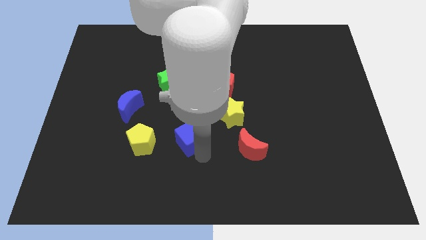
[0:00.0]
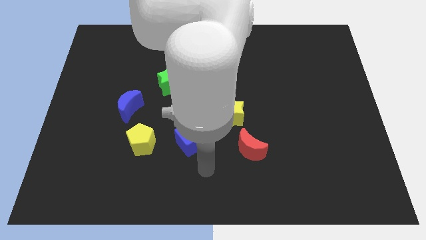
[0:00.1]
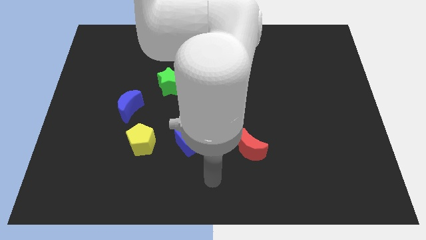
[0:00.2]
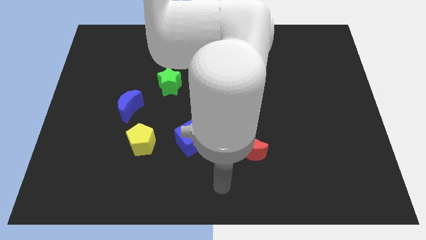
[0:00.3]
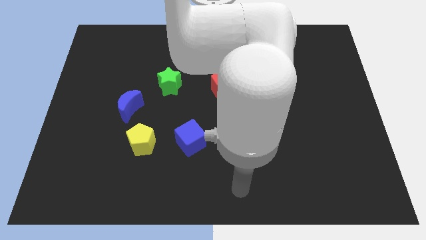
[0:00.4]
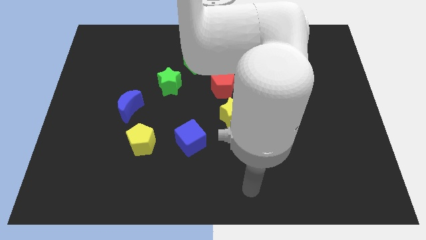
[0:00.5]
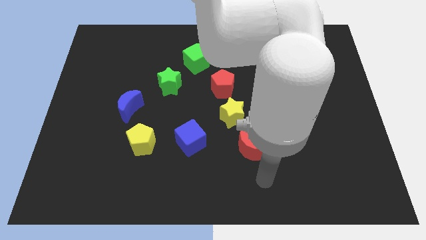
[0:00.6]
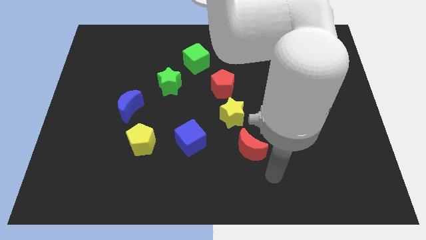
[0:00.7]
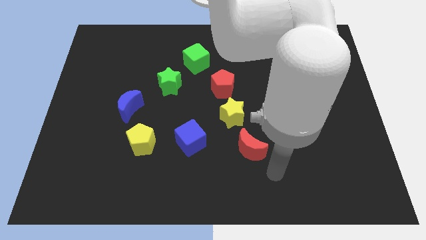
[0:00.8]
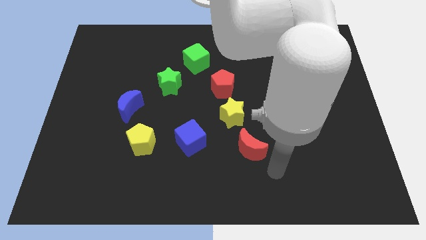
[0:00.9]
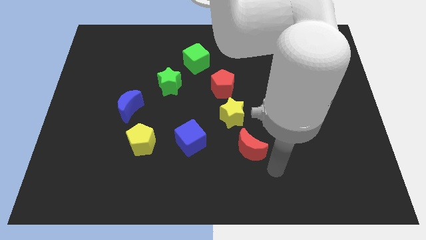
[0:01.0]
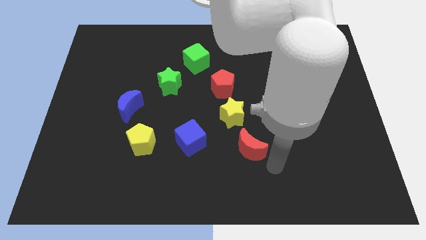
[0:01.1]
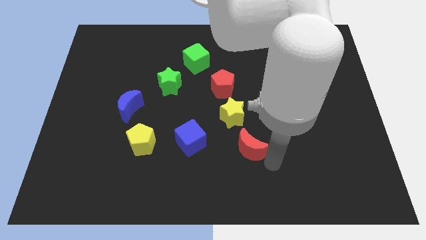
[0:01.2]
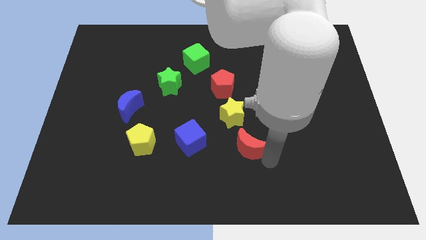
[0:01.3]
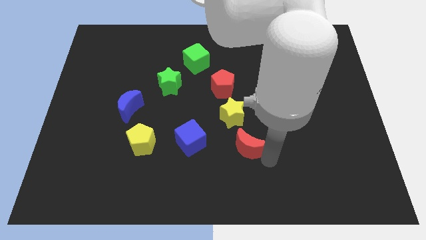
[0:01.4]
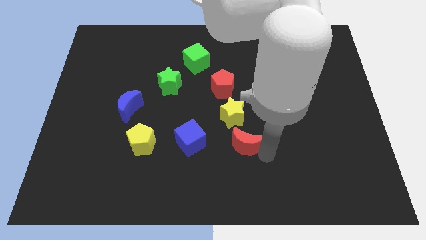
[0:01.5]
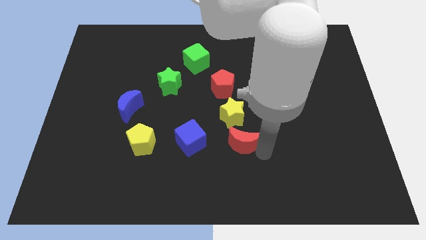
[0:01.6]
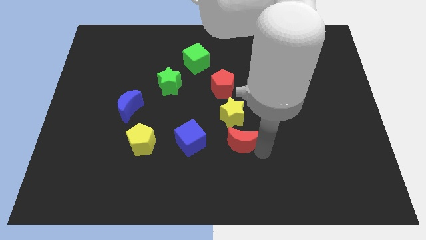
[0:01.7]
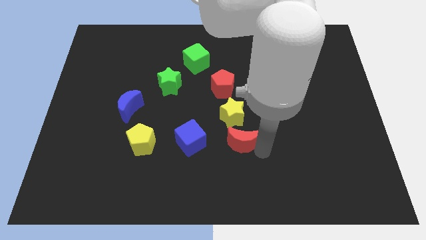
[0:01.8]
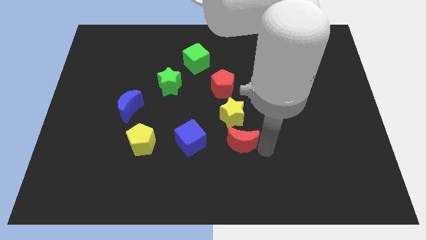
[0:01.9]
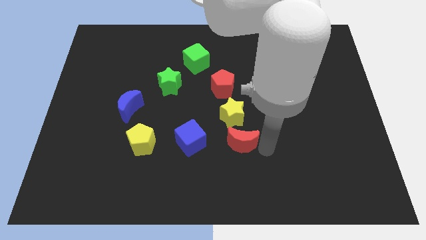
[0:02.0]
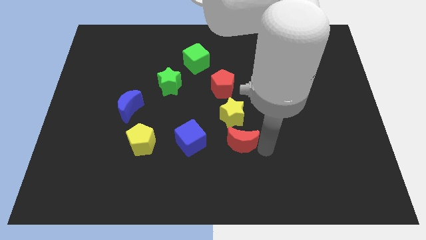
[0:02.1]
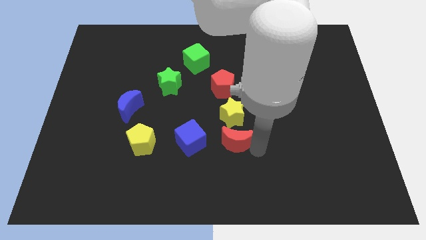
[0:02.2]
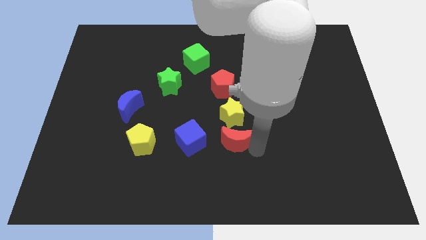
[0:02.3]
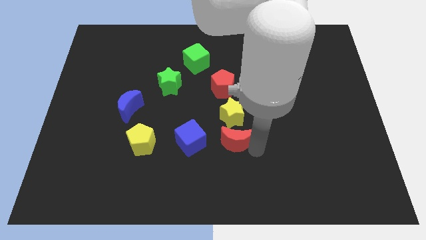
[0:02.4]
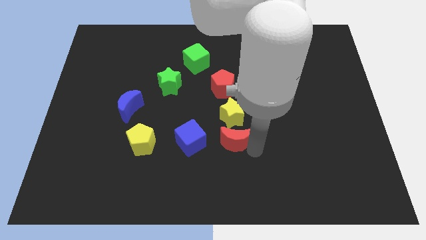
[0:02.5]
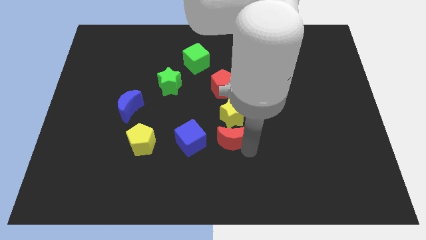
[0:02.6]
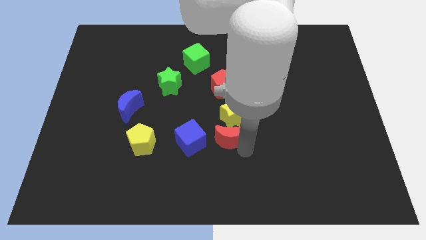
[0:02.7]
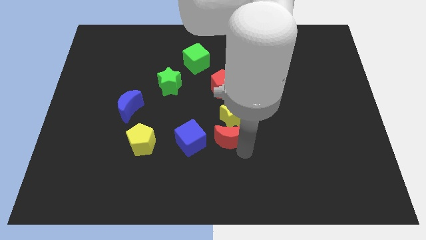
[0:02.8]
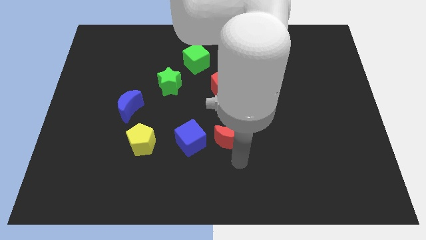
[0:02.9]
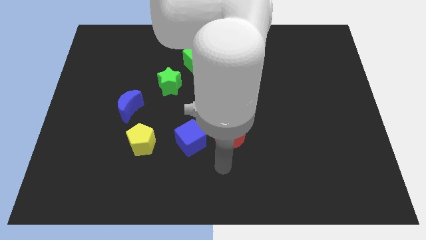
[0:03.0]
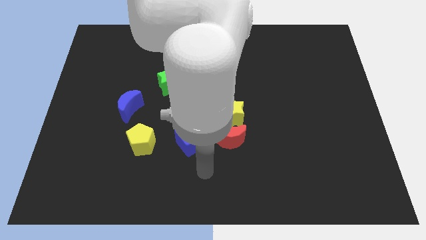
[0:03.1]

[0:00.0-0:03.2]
push red crescent slightly towards the yellow star

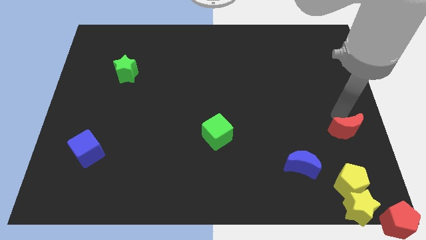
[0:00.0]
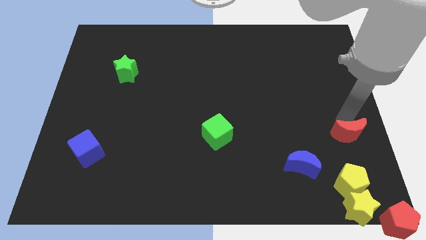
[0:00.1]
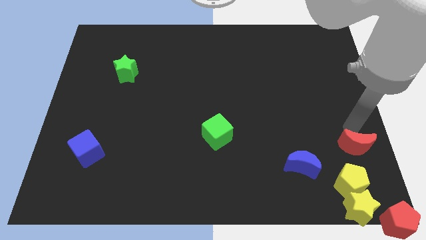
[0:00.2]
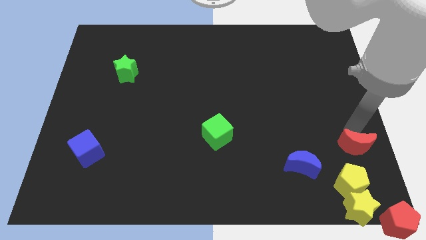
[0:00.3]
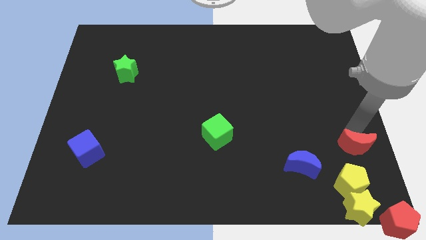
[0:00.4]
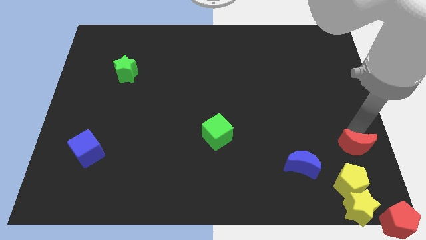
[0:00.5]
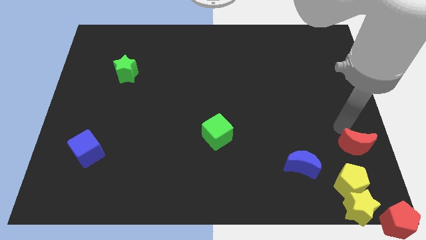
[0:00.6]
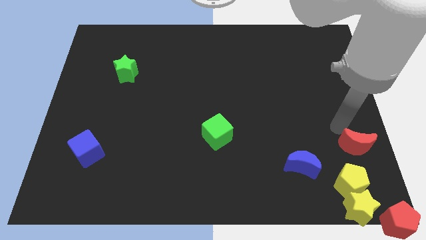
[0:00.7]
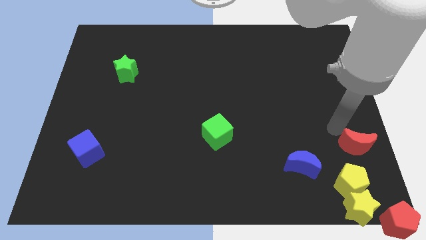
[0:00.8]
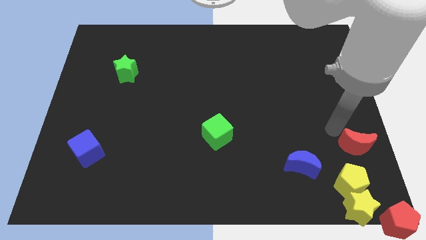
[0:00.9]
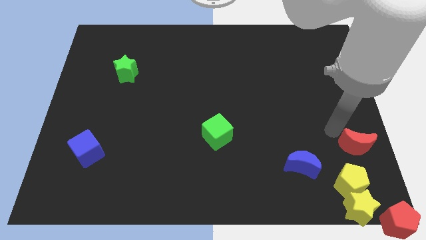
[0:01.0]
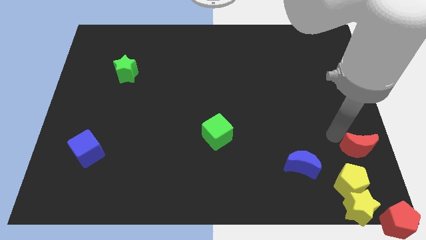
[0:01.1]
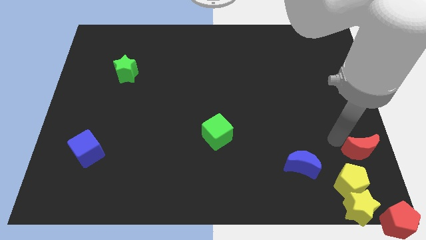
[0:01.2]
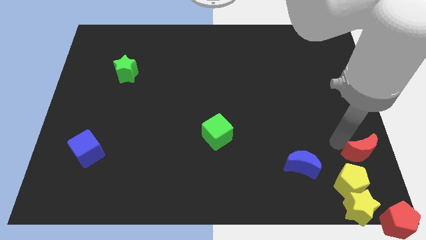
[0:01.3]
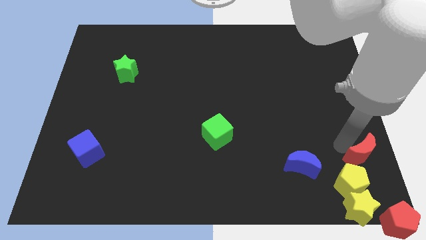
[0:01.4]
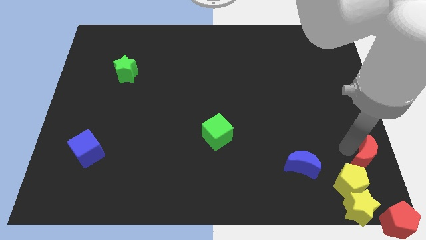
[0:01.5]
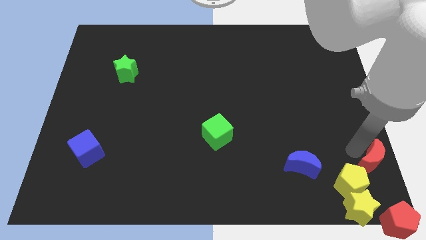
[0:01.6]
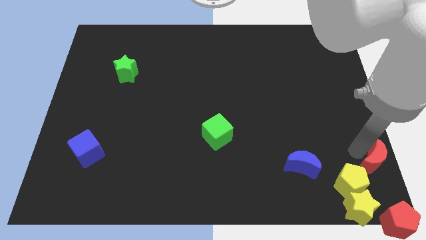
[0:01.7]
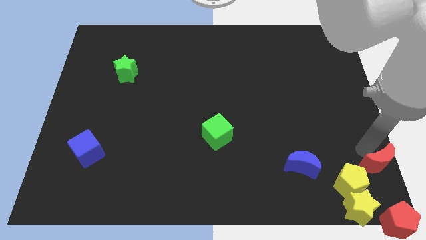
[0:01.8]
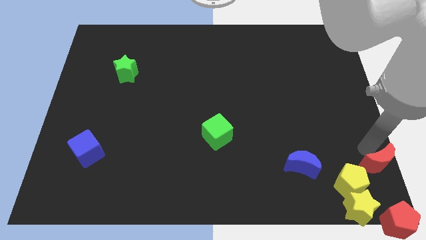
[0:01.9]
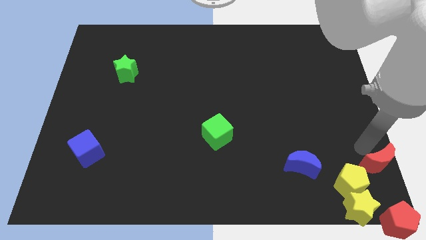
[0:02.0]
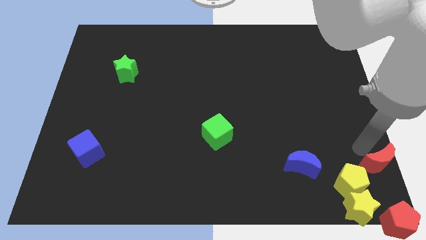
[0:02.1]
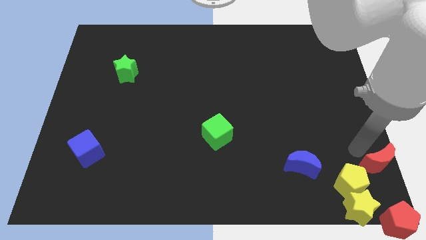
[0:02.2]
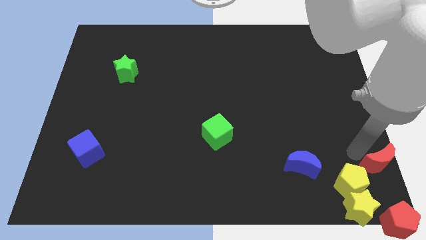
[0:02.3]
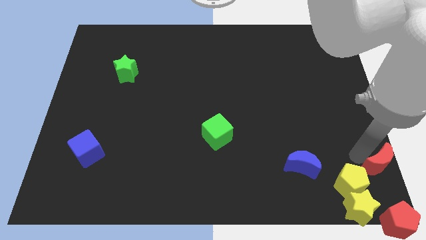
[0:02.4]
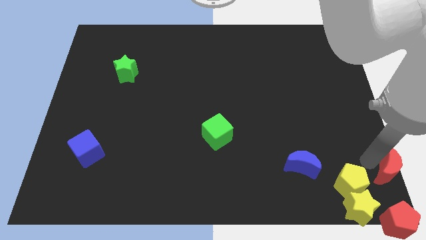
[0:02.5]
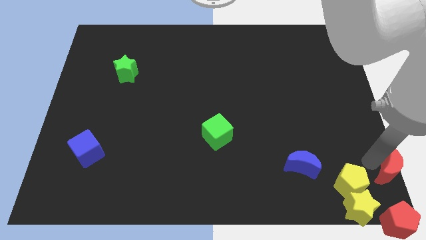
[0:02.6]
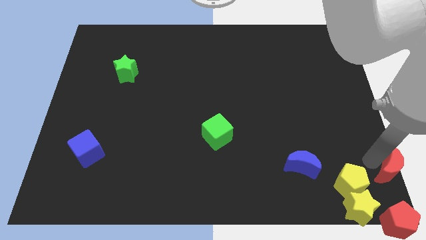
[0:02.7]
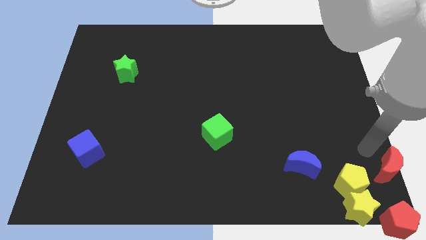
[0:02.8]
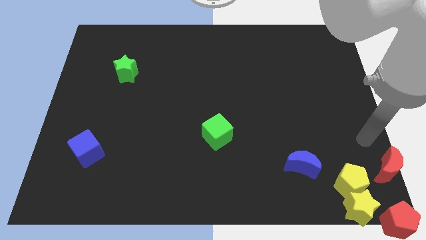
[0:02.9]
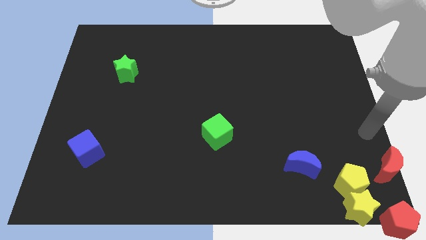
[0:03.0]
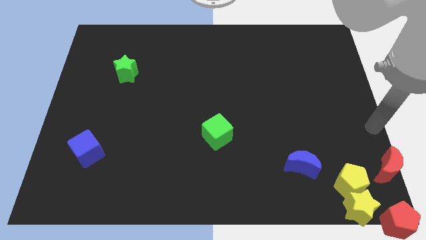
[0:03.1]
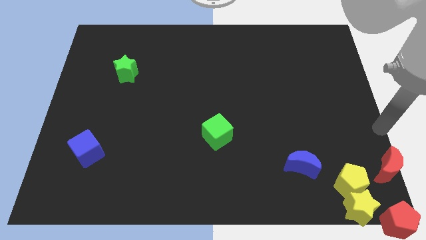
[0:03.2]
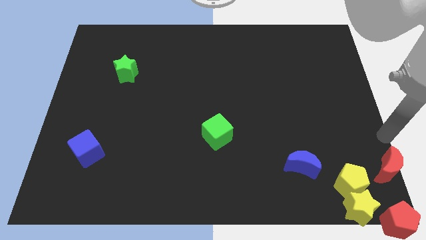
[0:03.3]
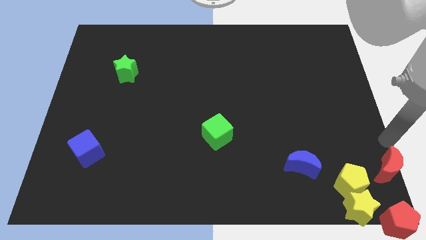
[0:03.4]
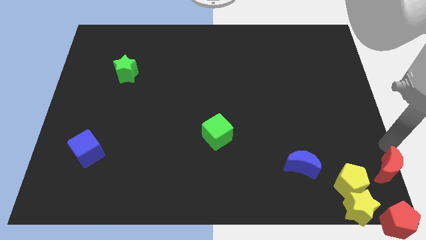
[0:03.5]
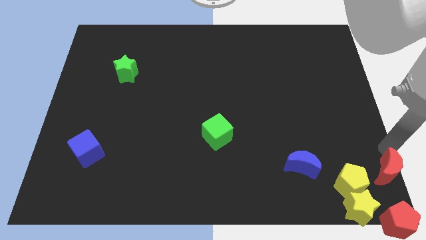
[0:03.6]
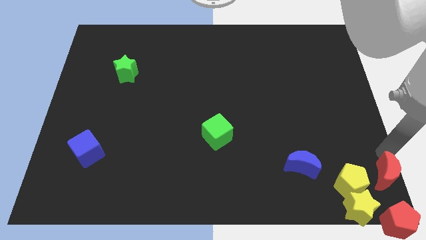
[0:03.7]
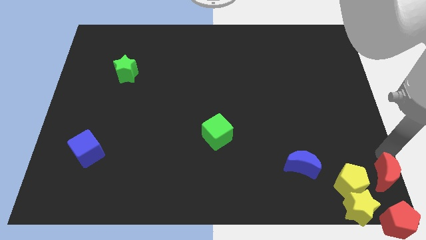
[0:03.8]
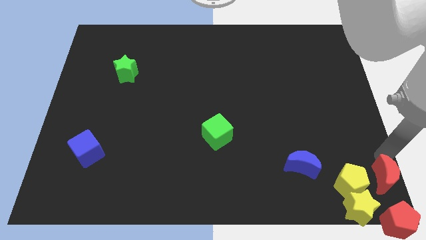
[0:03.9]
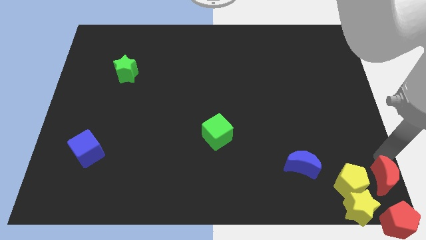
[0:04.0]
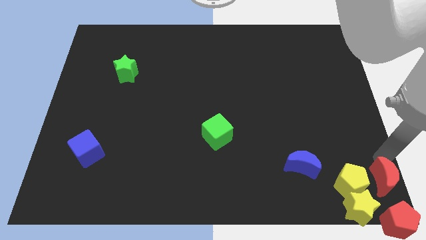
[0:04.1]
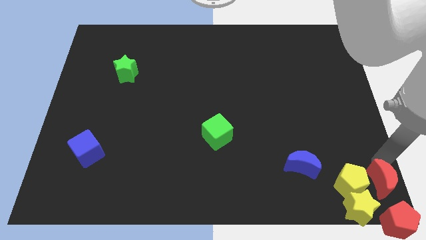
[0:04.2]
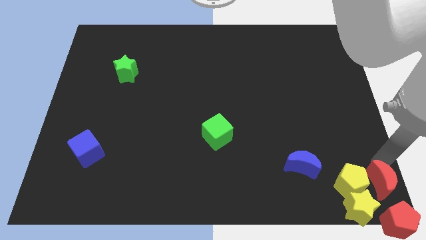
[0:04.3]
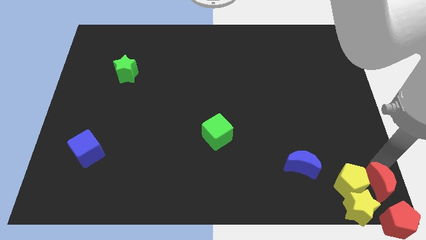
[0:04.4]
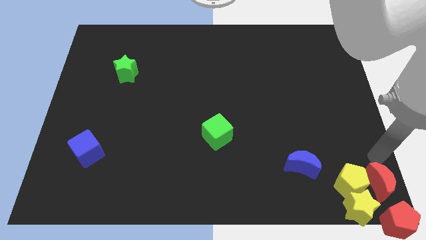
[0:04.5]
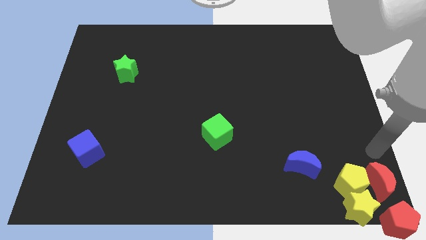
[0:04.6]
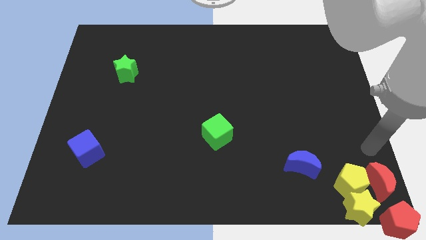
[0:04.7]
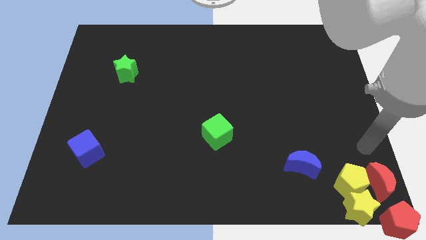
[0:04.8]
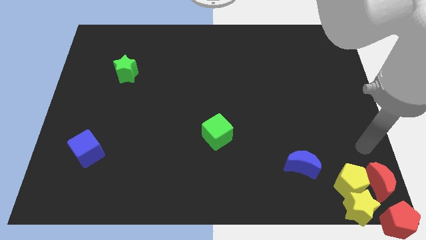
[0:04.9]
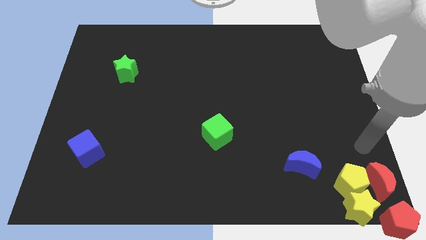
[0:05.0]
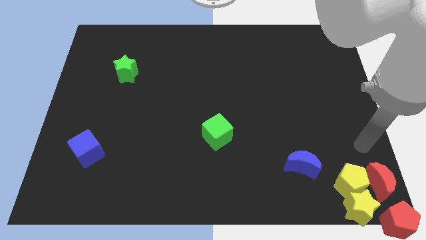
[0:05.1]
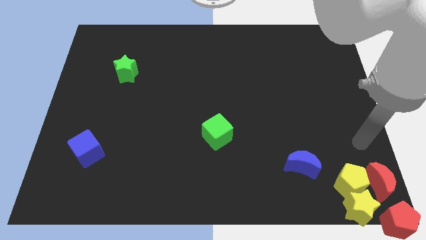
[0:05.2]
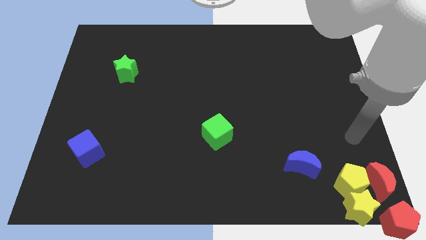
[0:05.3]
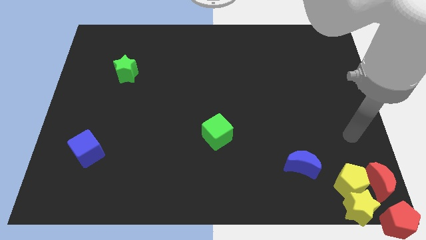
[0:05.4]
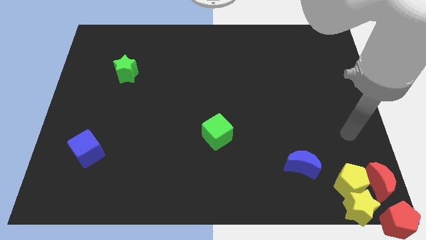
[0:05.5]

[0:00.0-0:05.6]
move the red moon beside the yellow blocks

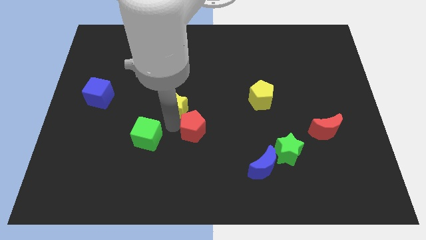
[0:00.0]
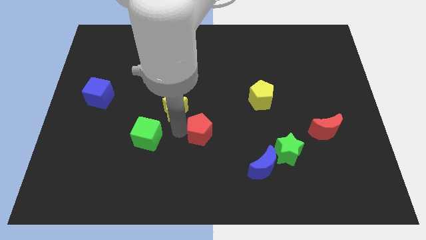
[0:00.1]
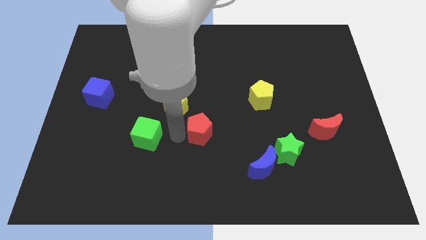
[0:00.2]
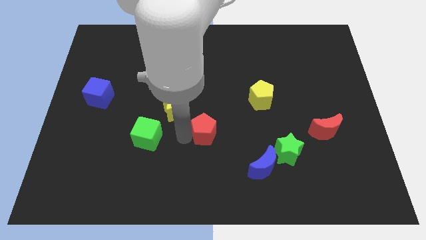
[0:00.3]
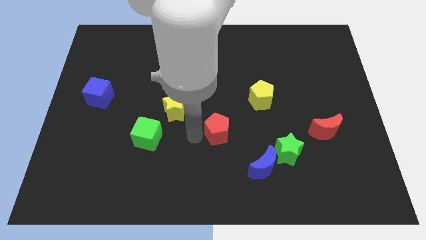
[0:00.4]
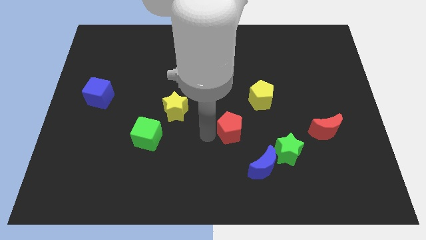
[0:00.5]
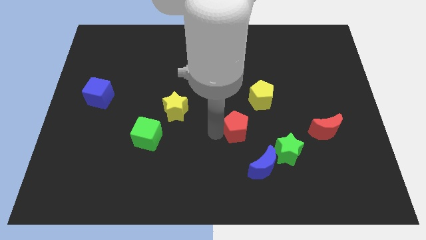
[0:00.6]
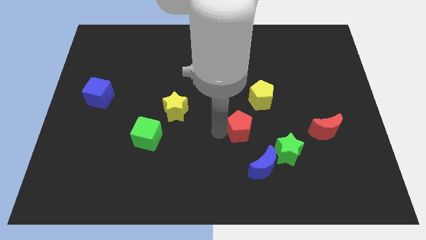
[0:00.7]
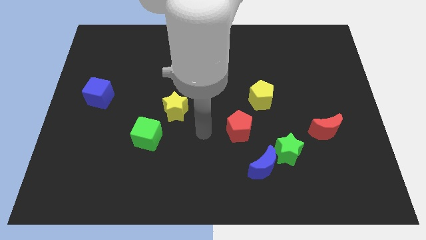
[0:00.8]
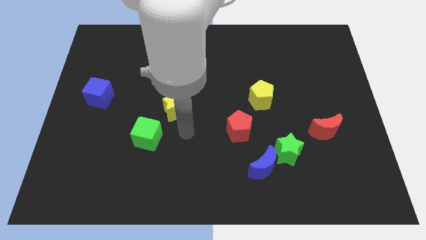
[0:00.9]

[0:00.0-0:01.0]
move the red pentagon towards the right
